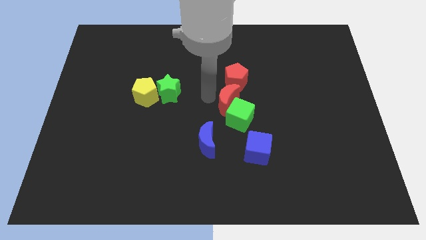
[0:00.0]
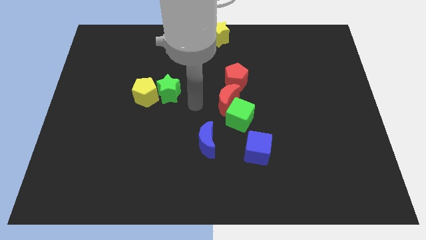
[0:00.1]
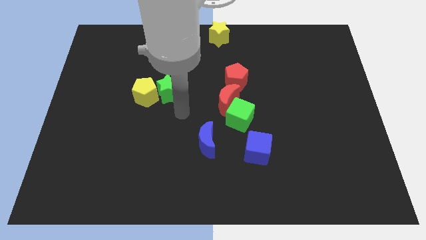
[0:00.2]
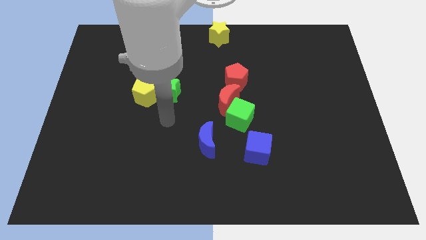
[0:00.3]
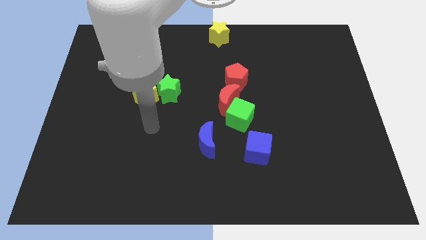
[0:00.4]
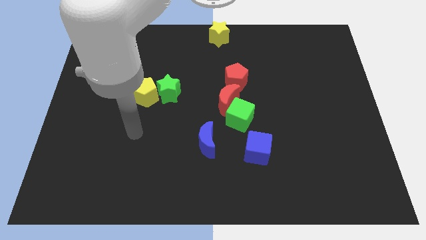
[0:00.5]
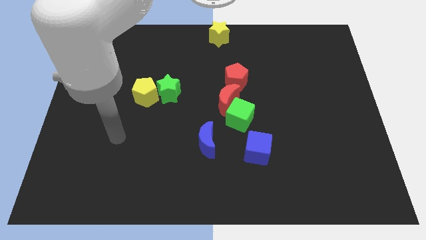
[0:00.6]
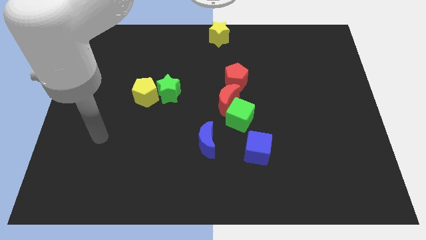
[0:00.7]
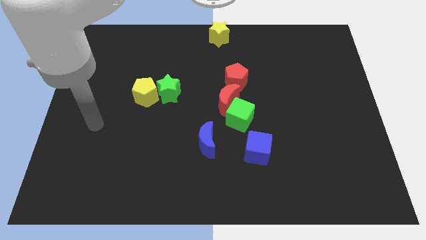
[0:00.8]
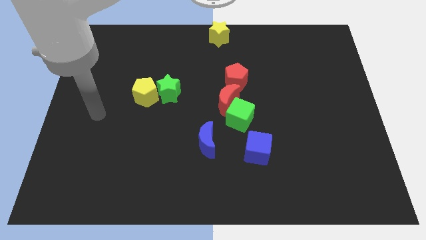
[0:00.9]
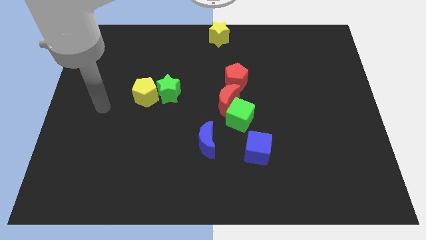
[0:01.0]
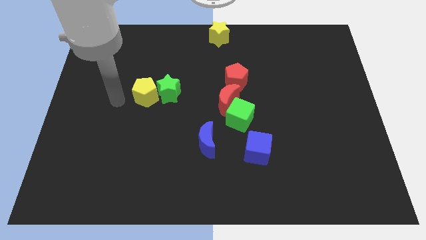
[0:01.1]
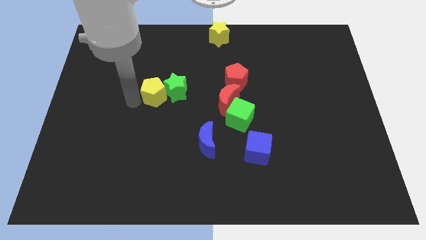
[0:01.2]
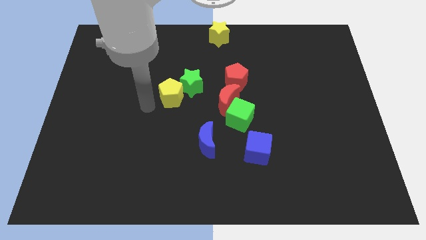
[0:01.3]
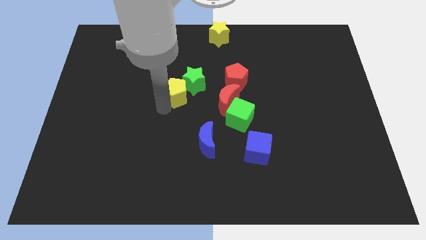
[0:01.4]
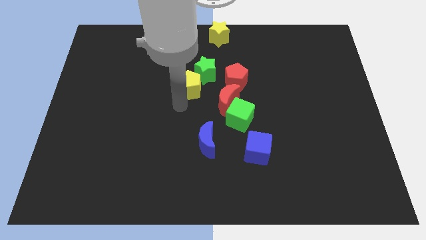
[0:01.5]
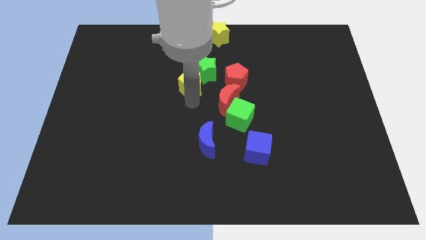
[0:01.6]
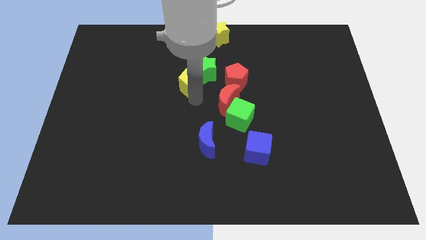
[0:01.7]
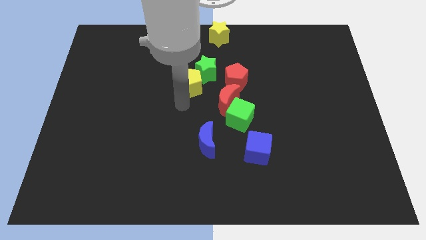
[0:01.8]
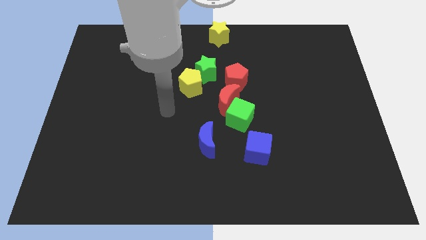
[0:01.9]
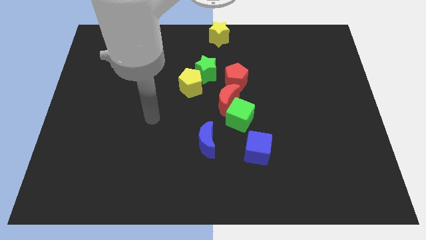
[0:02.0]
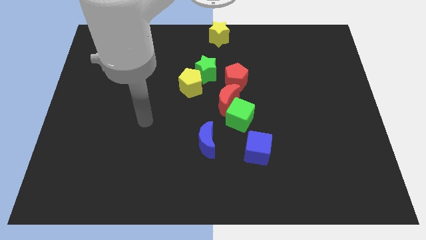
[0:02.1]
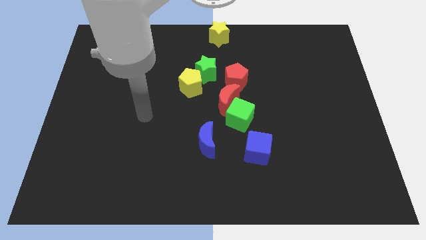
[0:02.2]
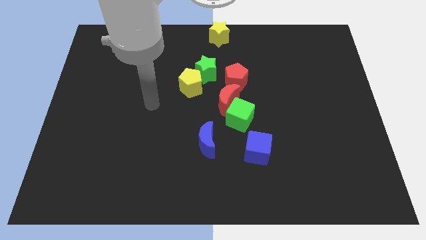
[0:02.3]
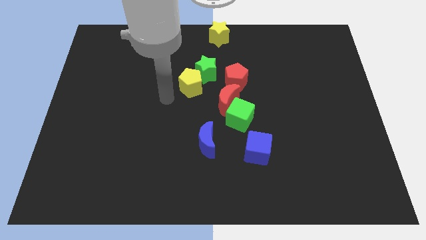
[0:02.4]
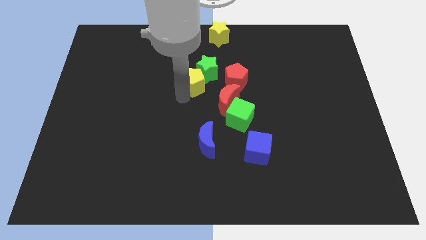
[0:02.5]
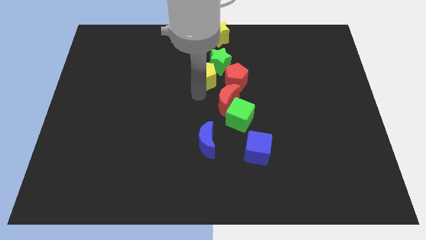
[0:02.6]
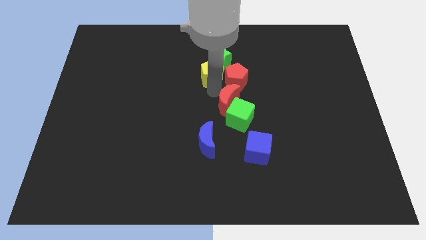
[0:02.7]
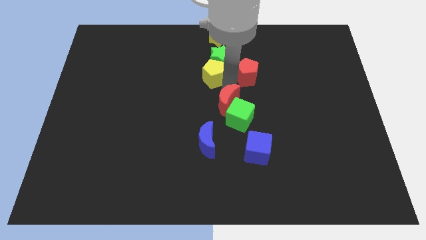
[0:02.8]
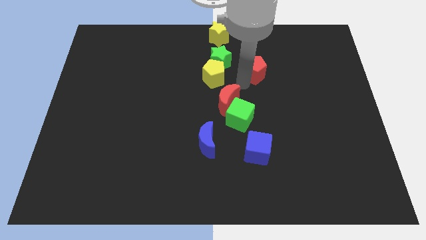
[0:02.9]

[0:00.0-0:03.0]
place yellow pentagon to the bottom of green star

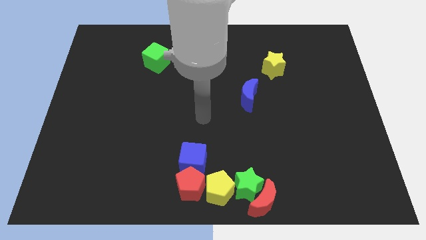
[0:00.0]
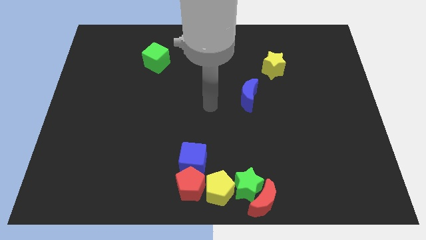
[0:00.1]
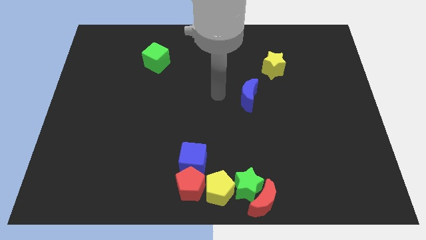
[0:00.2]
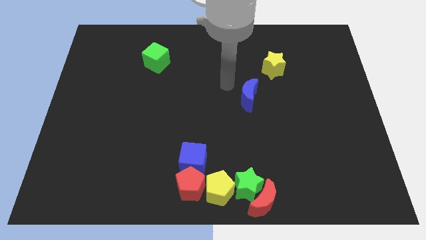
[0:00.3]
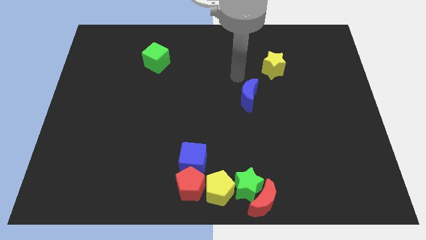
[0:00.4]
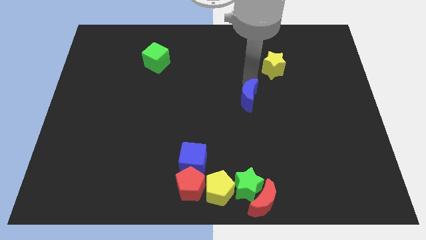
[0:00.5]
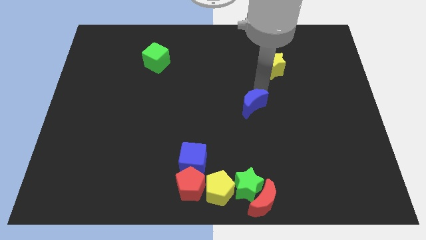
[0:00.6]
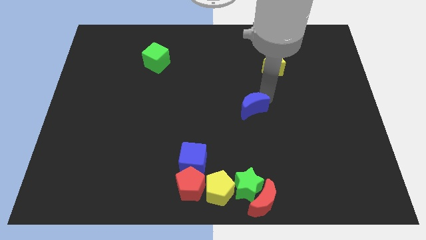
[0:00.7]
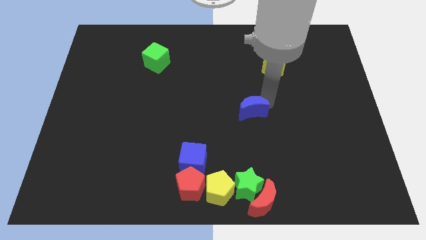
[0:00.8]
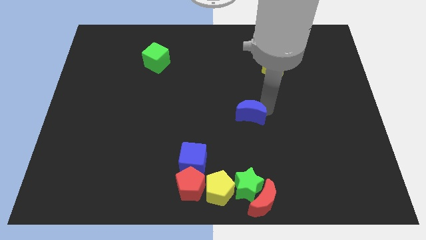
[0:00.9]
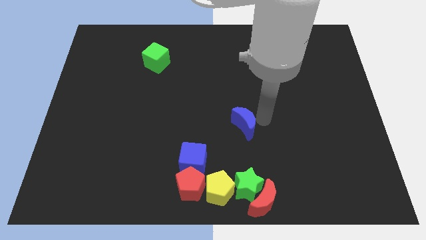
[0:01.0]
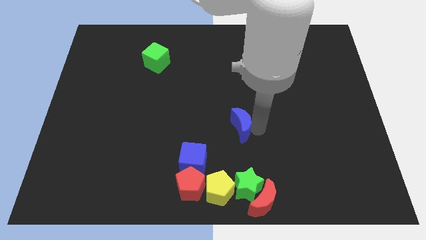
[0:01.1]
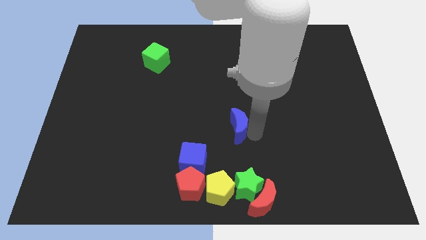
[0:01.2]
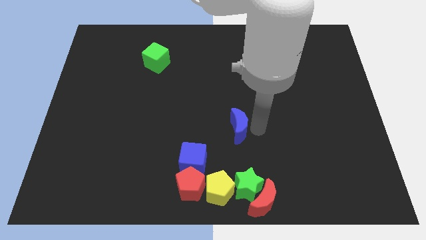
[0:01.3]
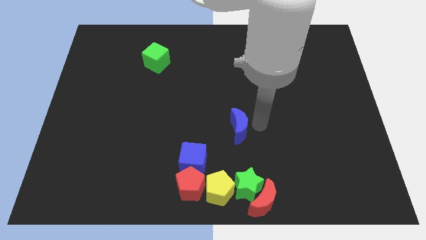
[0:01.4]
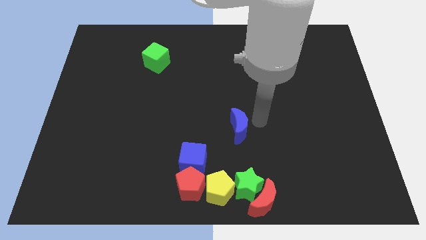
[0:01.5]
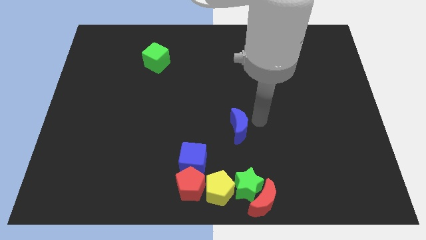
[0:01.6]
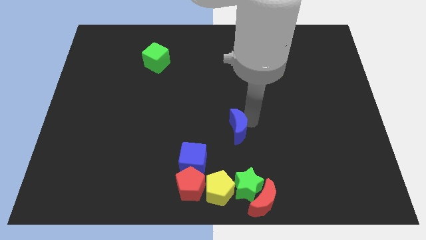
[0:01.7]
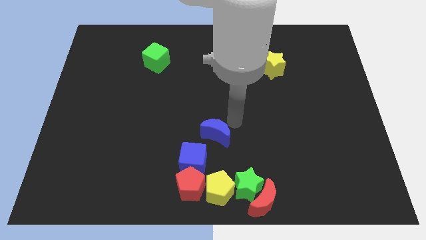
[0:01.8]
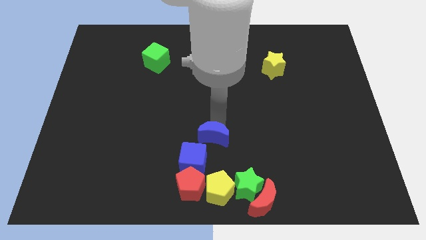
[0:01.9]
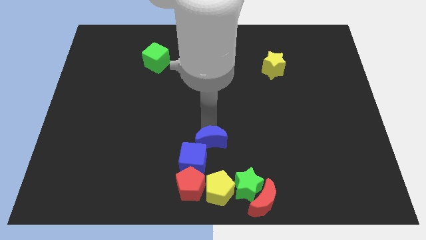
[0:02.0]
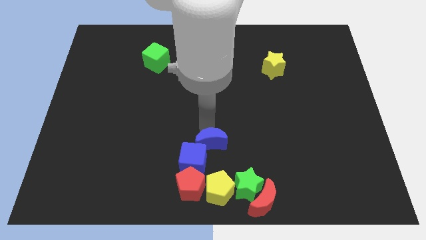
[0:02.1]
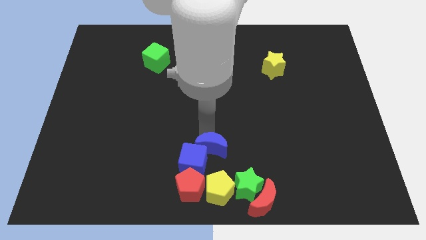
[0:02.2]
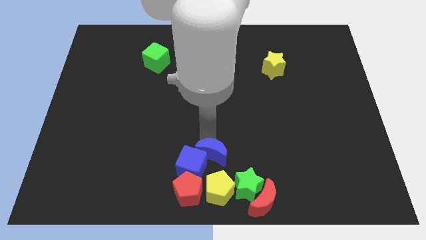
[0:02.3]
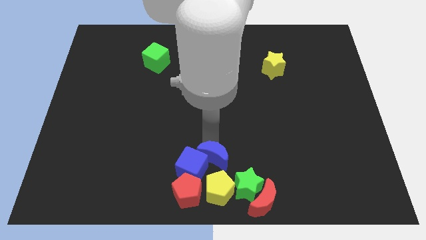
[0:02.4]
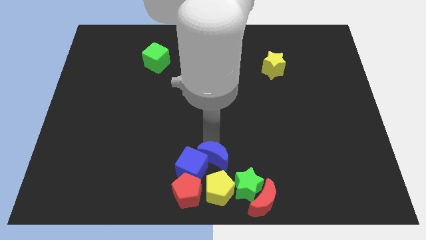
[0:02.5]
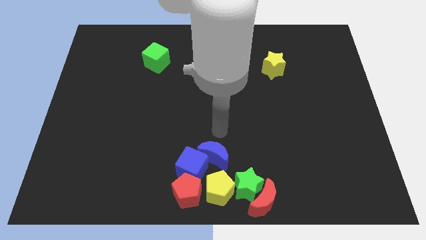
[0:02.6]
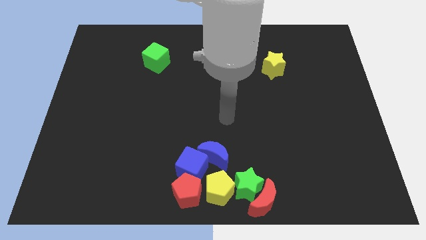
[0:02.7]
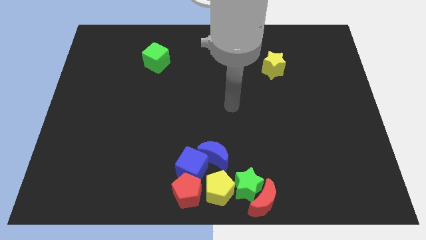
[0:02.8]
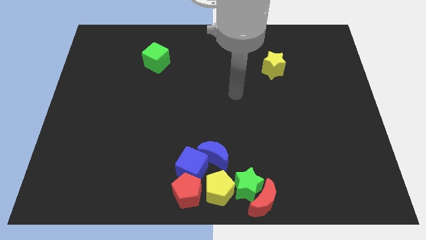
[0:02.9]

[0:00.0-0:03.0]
move the blue moon into the top of the blue cube

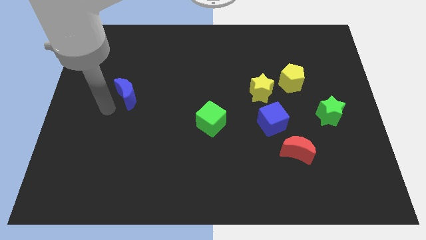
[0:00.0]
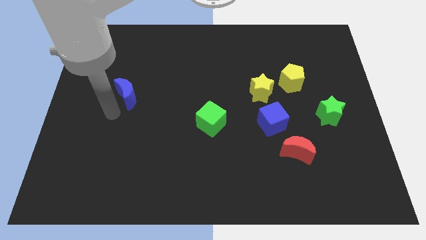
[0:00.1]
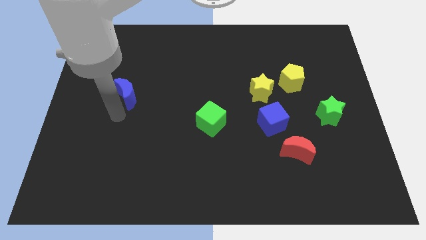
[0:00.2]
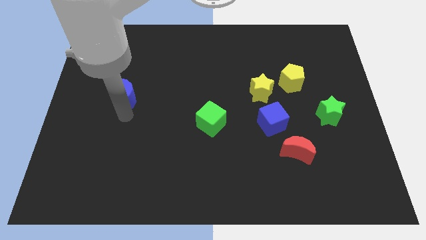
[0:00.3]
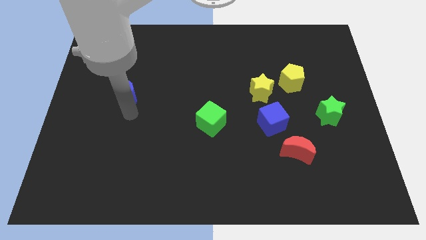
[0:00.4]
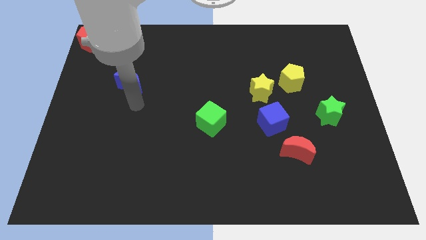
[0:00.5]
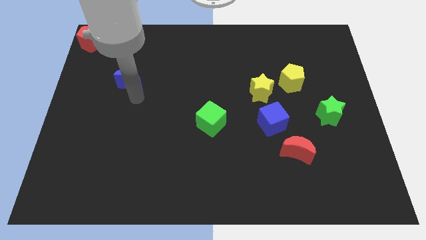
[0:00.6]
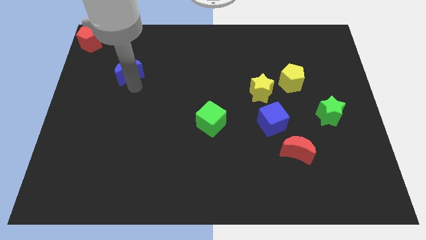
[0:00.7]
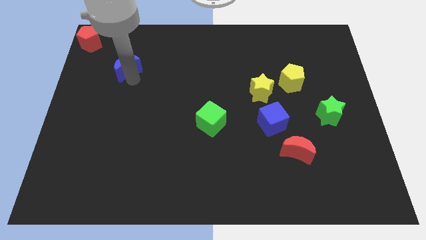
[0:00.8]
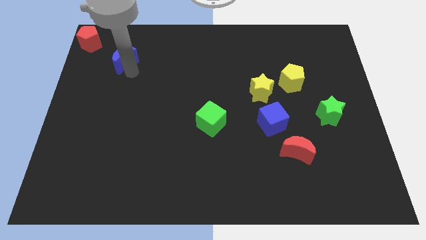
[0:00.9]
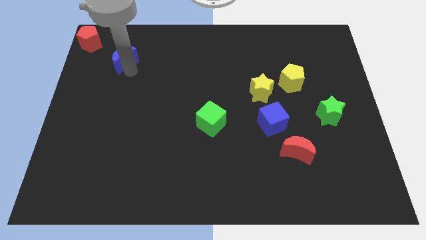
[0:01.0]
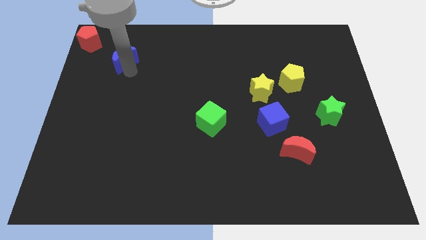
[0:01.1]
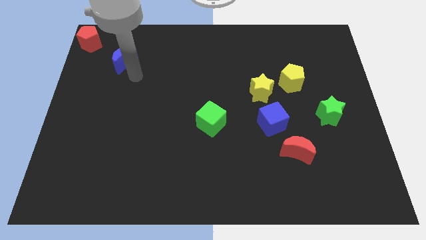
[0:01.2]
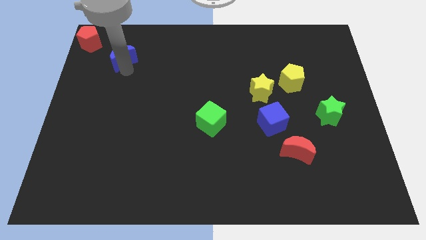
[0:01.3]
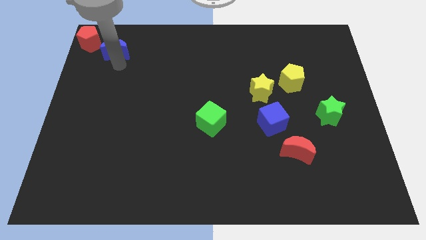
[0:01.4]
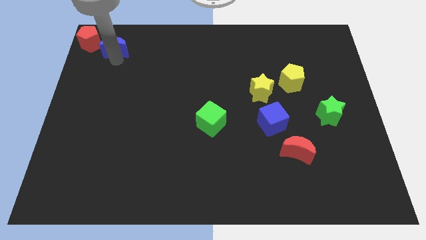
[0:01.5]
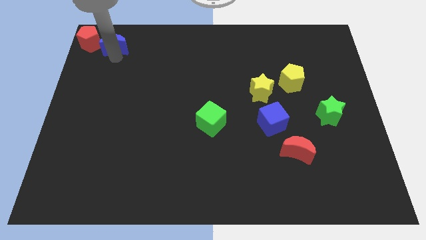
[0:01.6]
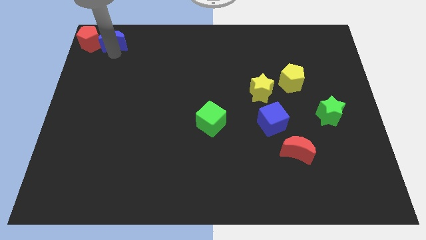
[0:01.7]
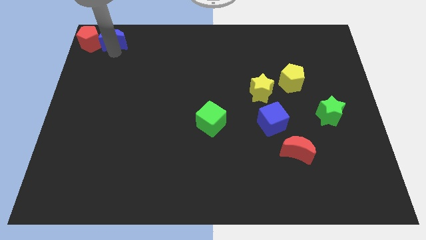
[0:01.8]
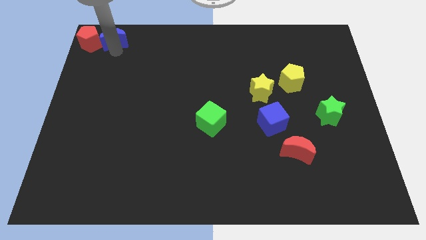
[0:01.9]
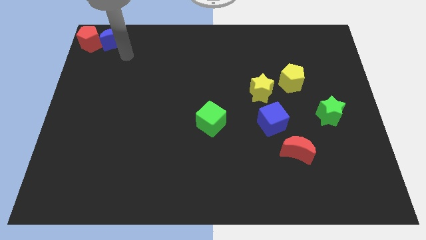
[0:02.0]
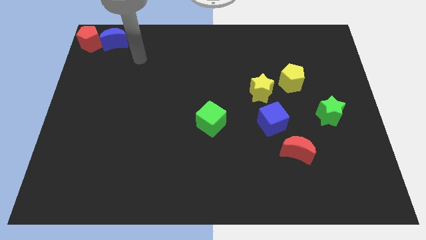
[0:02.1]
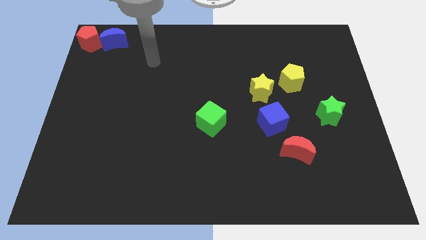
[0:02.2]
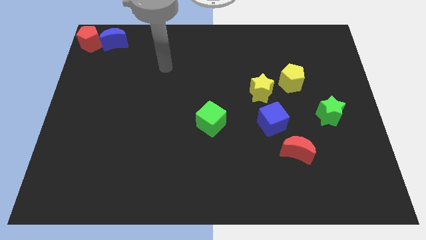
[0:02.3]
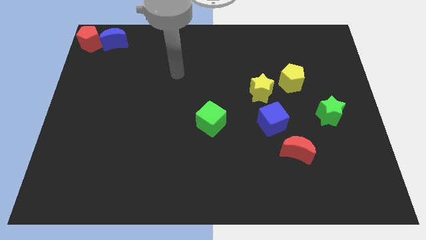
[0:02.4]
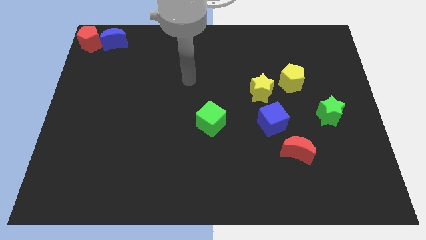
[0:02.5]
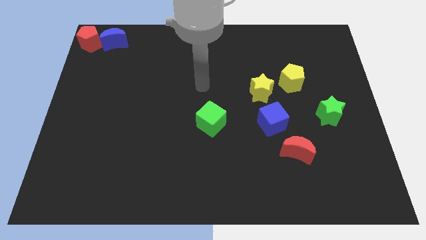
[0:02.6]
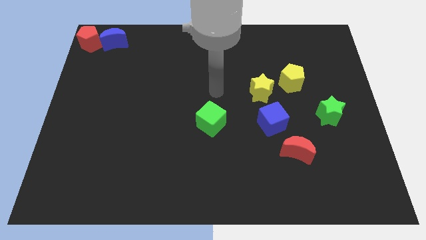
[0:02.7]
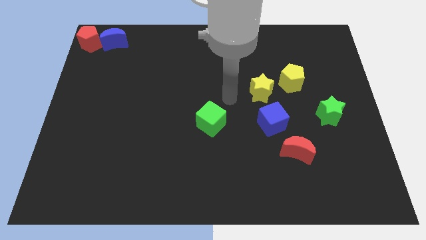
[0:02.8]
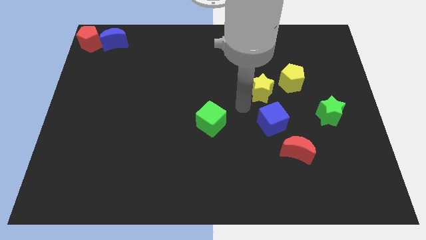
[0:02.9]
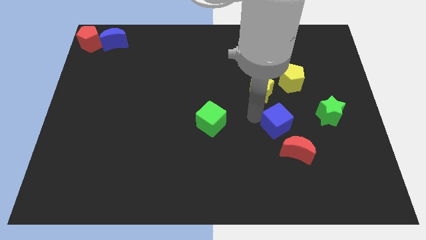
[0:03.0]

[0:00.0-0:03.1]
push the blue crescent to the right of the red pentagon
